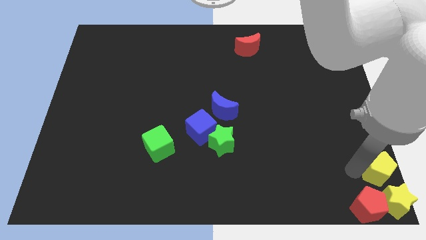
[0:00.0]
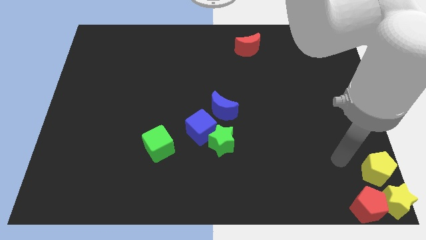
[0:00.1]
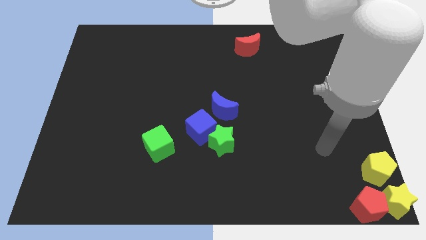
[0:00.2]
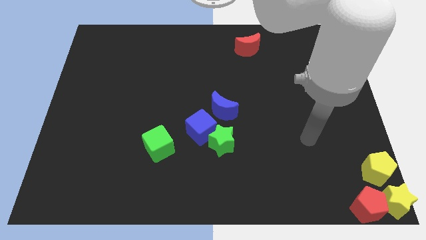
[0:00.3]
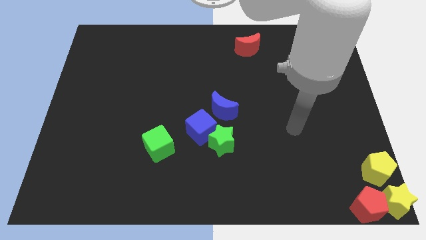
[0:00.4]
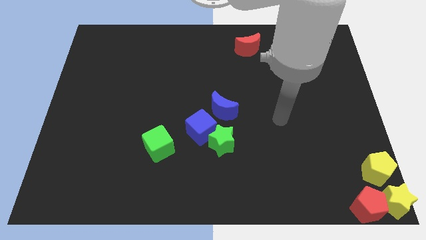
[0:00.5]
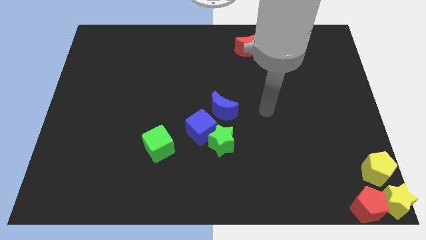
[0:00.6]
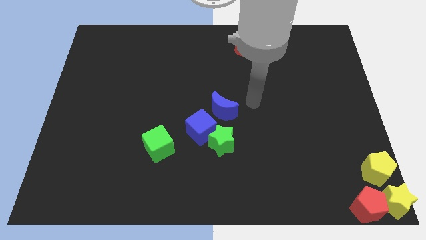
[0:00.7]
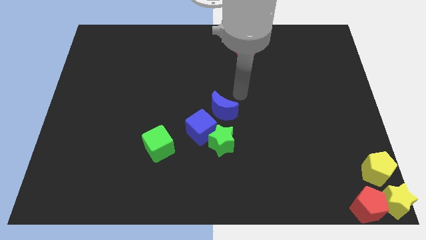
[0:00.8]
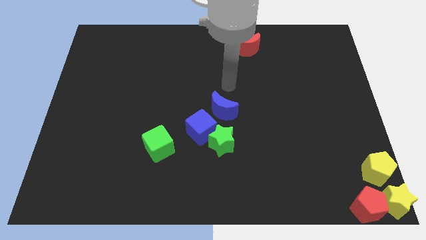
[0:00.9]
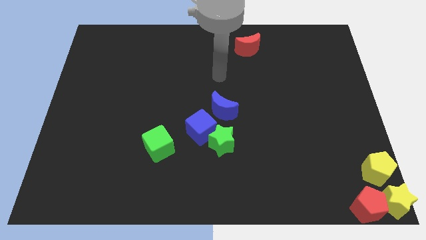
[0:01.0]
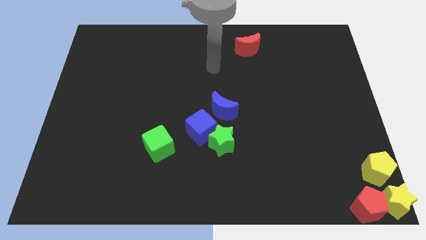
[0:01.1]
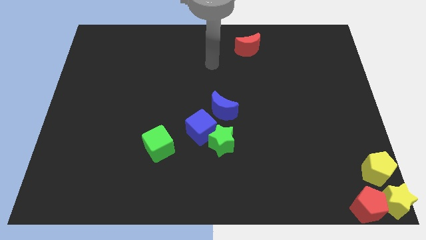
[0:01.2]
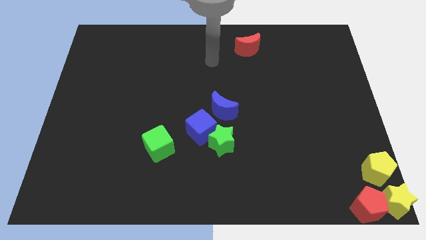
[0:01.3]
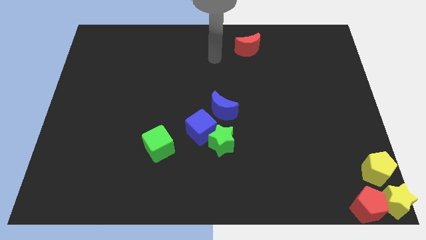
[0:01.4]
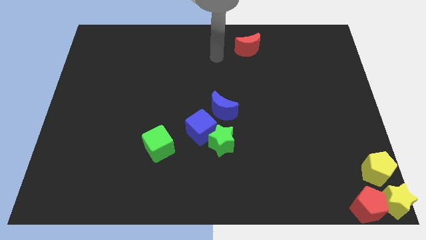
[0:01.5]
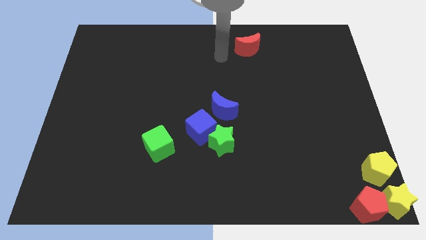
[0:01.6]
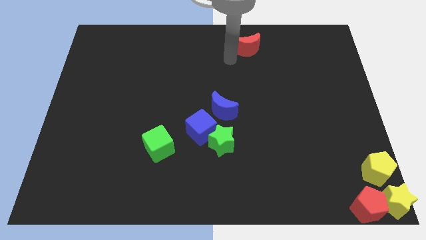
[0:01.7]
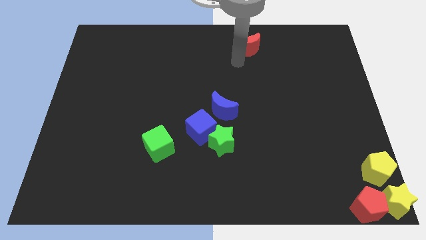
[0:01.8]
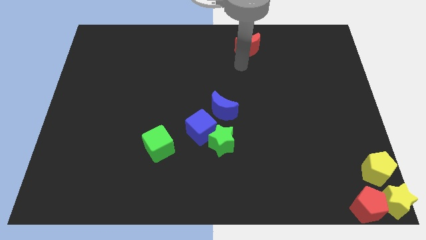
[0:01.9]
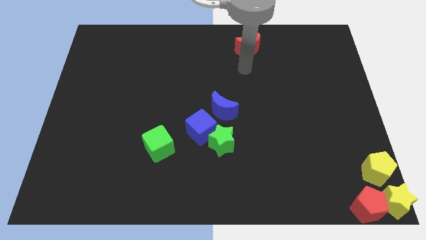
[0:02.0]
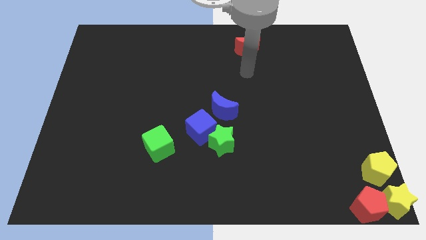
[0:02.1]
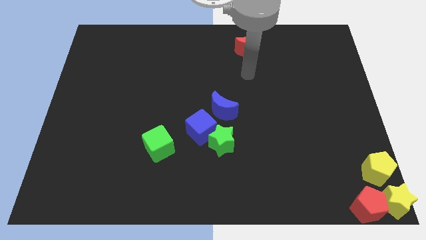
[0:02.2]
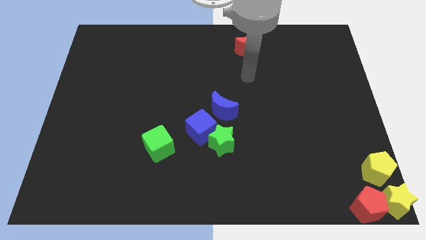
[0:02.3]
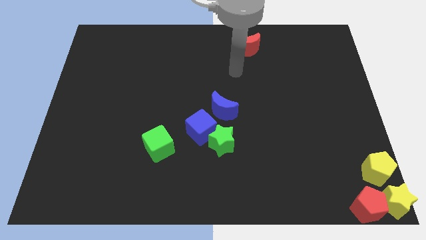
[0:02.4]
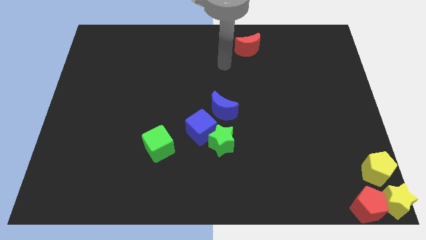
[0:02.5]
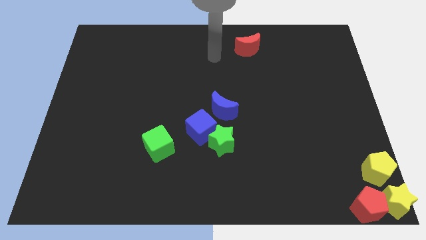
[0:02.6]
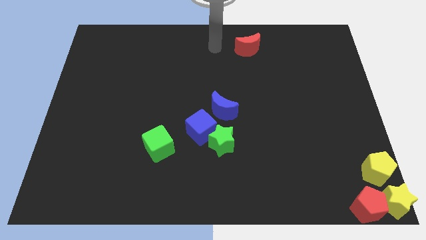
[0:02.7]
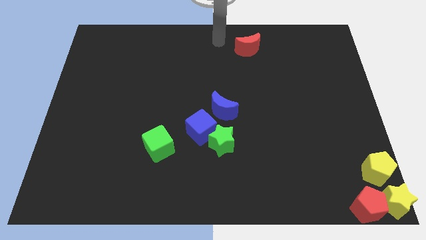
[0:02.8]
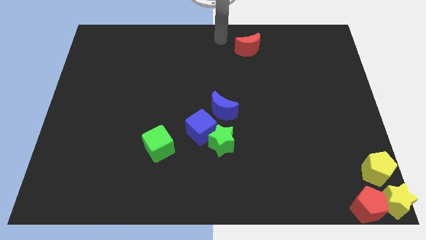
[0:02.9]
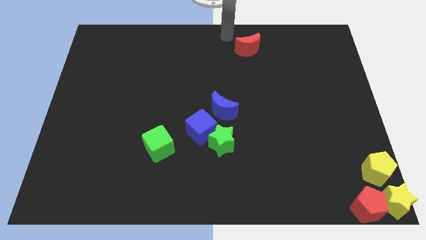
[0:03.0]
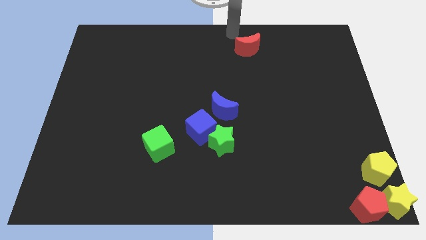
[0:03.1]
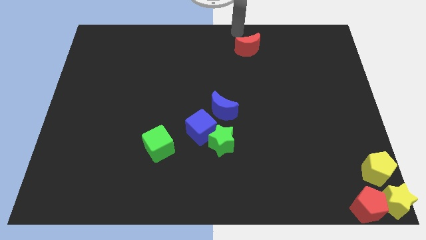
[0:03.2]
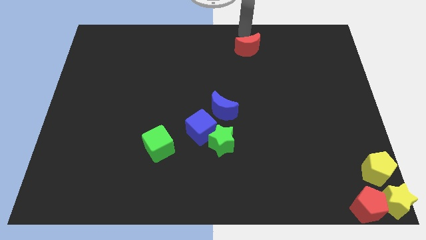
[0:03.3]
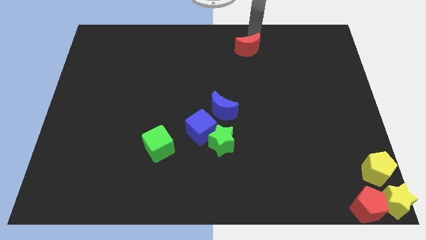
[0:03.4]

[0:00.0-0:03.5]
place your arm at the top of red crescent

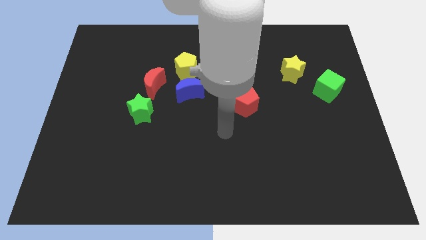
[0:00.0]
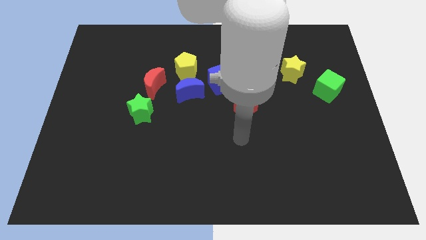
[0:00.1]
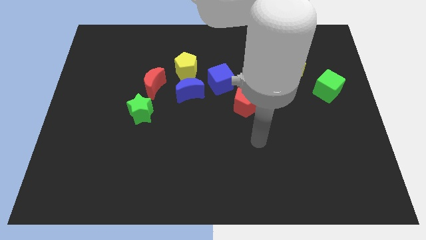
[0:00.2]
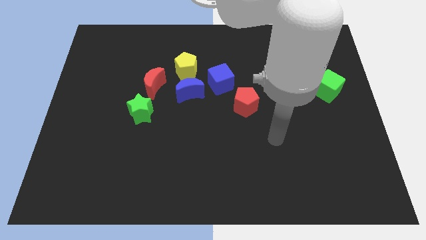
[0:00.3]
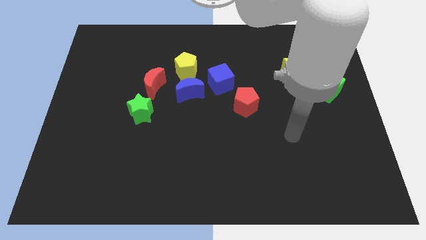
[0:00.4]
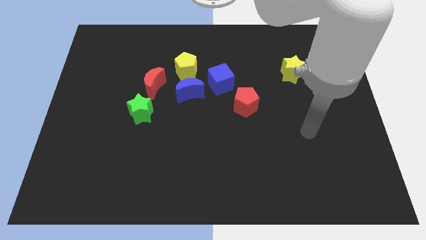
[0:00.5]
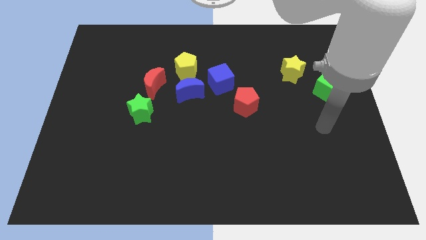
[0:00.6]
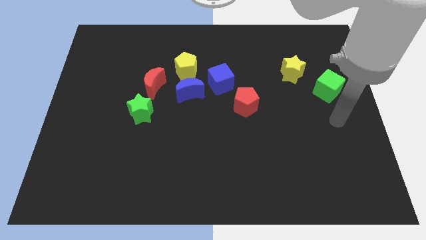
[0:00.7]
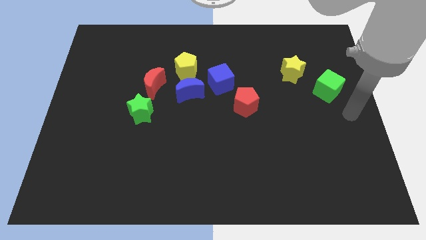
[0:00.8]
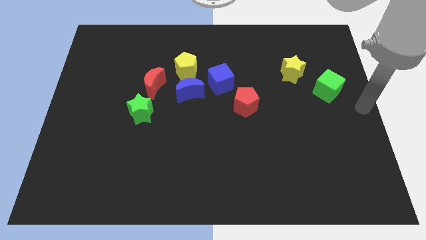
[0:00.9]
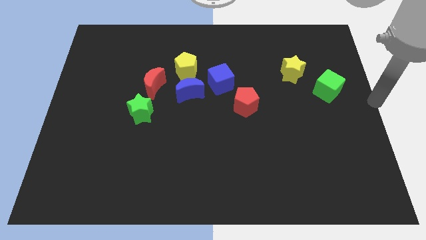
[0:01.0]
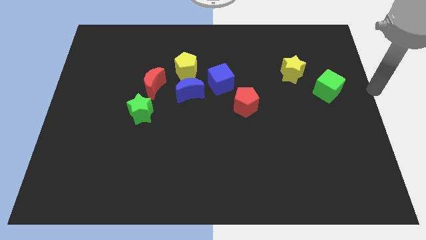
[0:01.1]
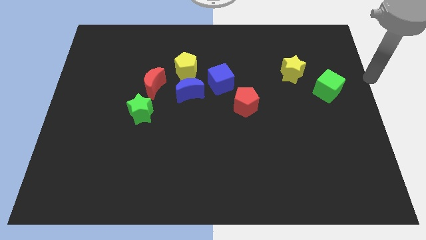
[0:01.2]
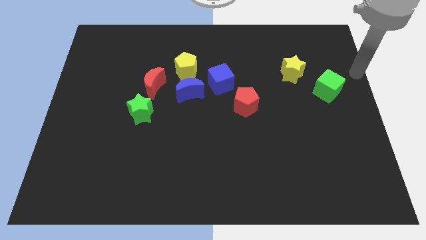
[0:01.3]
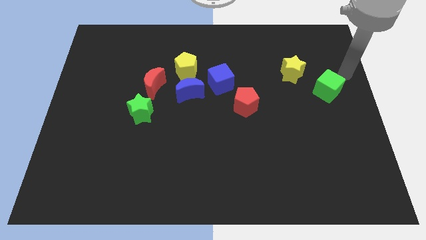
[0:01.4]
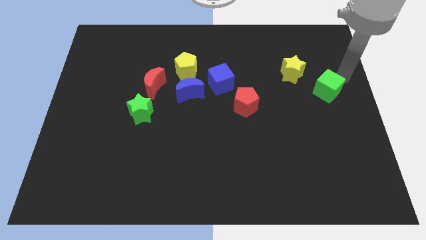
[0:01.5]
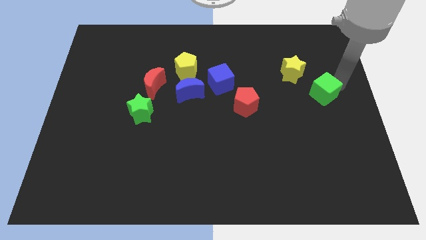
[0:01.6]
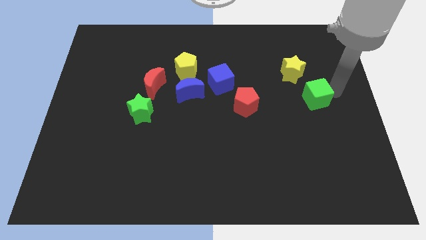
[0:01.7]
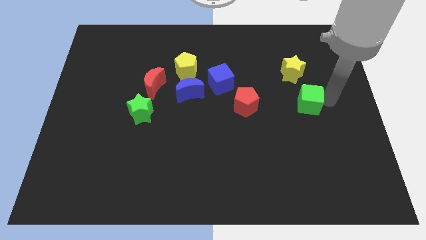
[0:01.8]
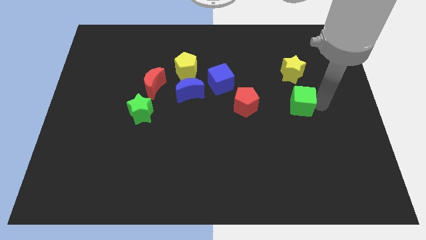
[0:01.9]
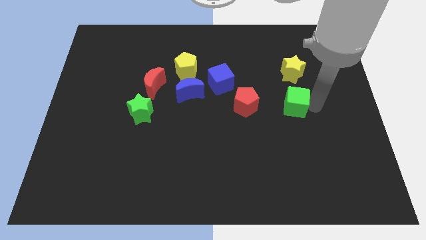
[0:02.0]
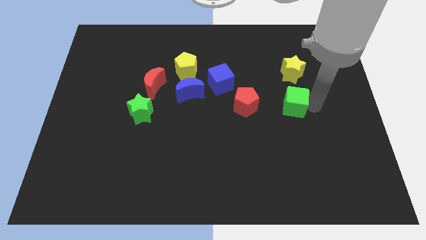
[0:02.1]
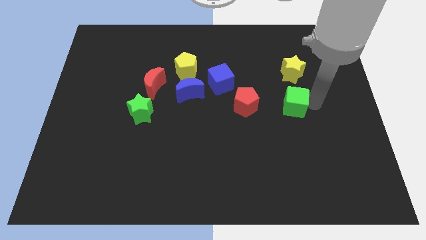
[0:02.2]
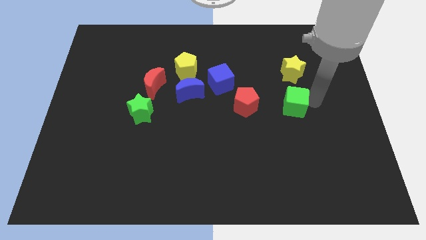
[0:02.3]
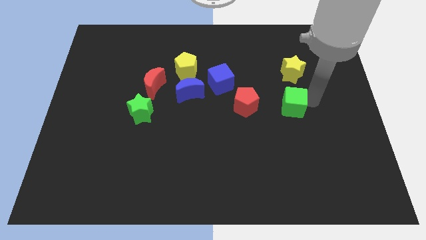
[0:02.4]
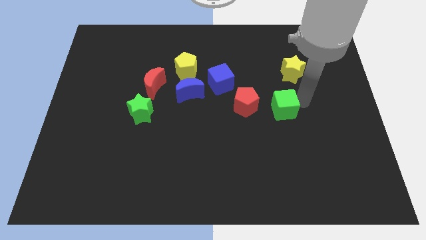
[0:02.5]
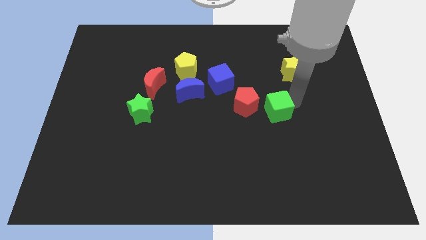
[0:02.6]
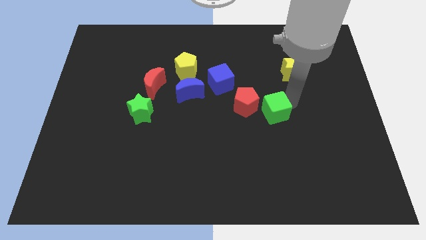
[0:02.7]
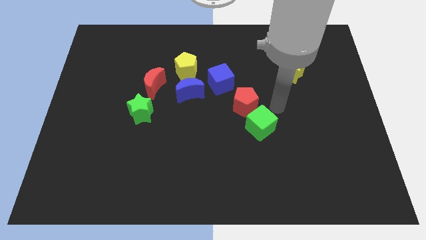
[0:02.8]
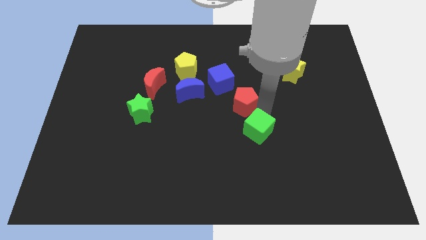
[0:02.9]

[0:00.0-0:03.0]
push the green cube into the red pentagon

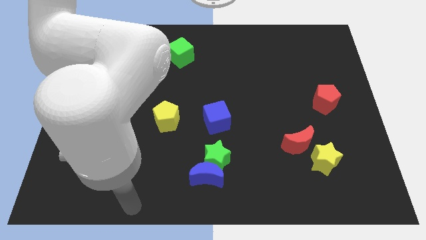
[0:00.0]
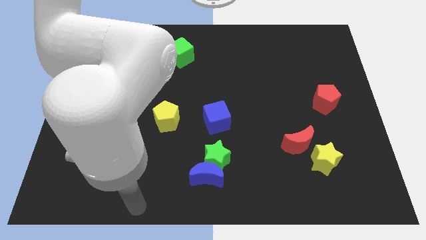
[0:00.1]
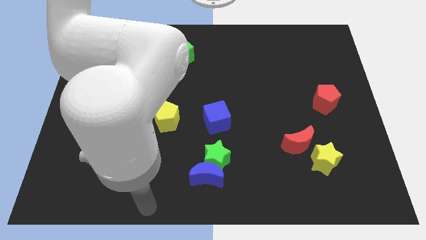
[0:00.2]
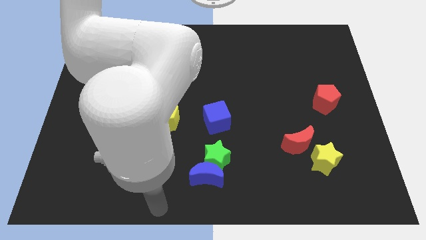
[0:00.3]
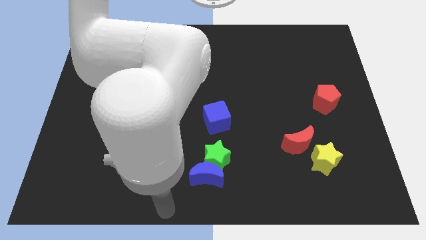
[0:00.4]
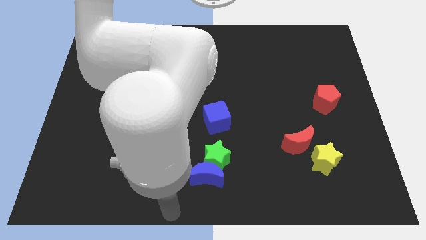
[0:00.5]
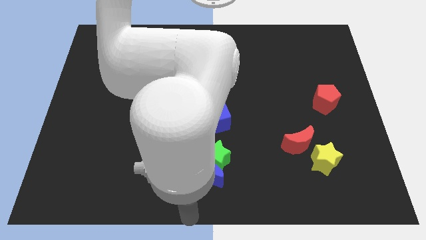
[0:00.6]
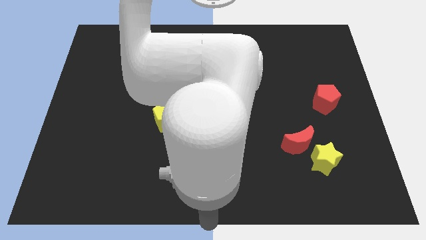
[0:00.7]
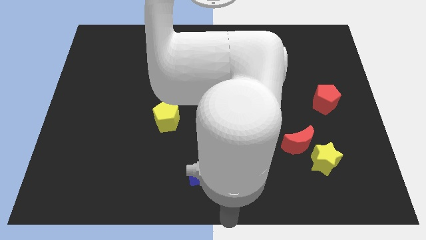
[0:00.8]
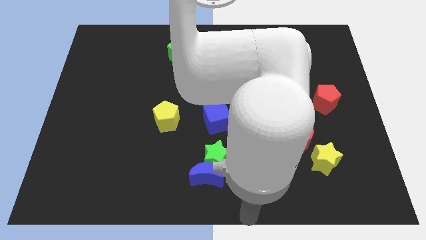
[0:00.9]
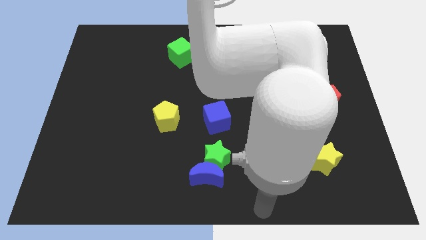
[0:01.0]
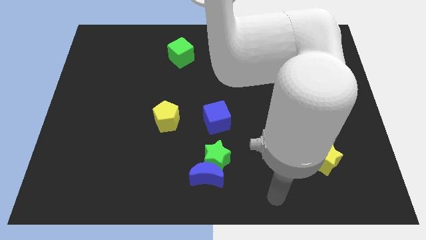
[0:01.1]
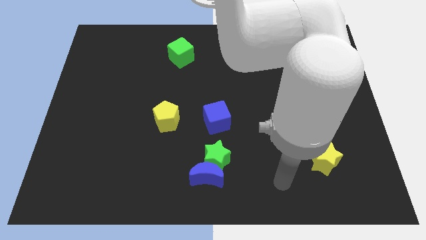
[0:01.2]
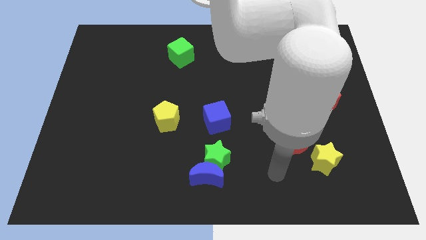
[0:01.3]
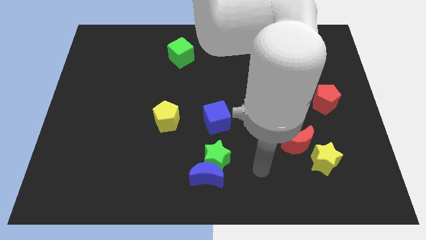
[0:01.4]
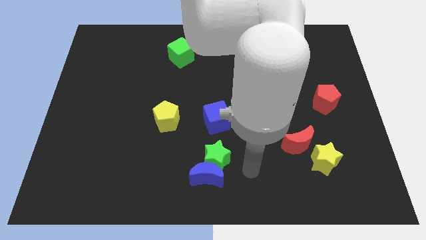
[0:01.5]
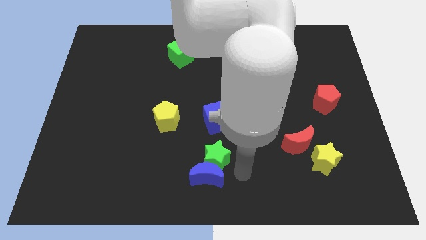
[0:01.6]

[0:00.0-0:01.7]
point your arm to the right of green star

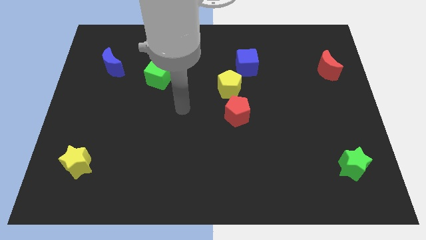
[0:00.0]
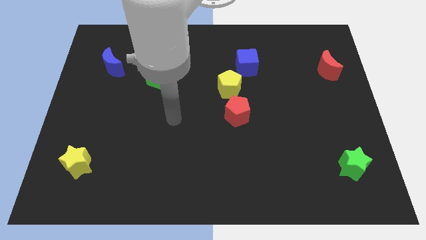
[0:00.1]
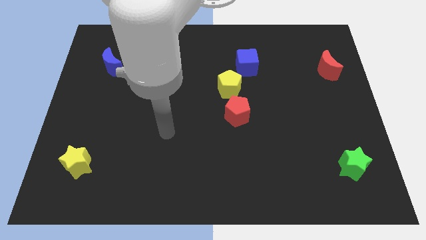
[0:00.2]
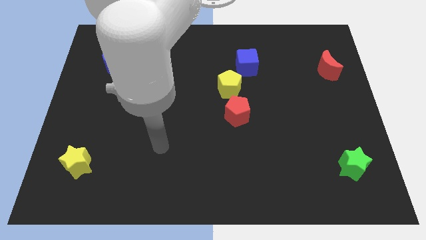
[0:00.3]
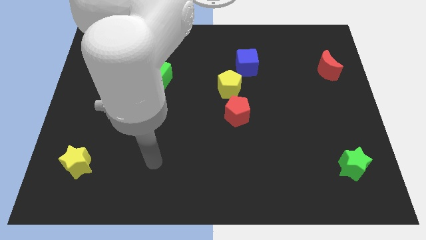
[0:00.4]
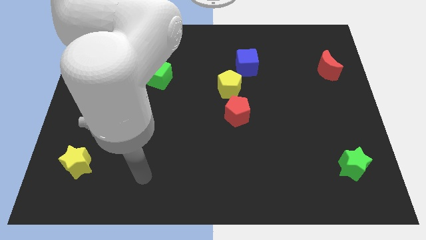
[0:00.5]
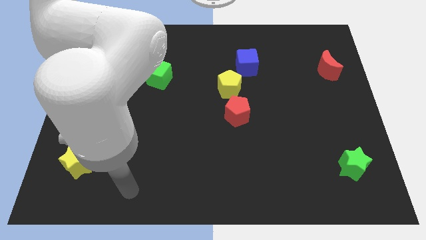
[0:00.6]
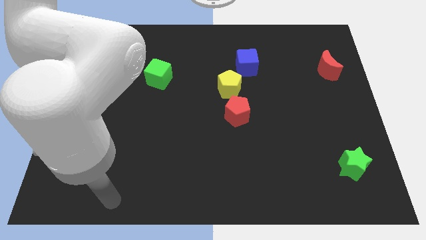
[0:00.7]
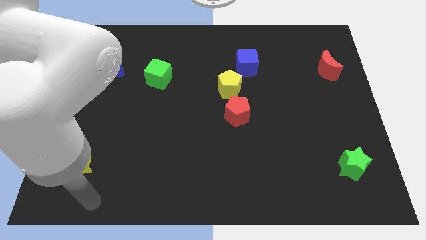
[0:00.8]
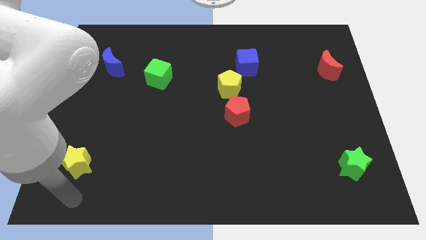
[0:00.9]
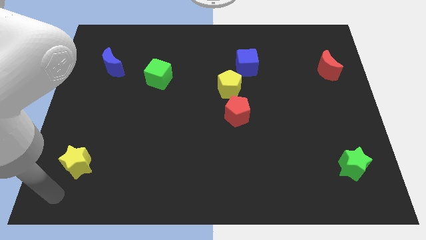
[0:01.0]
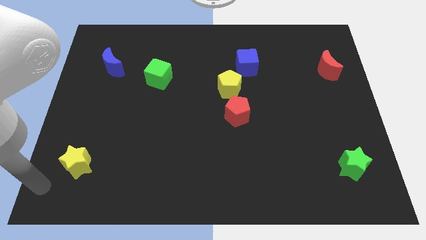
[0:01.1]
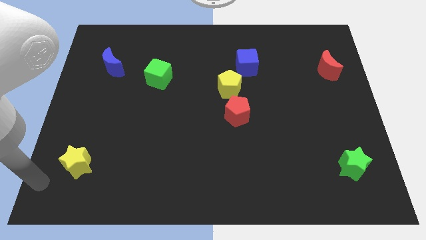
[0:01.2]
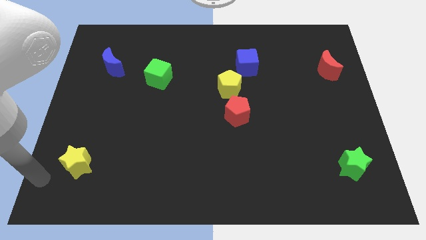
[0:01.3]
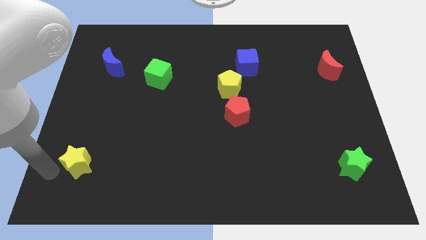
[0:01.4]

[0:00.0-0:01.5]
point your arm at the left of the yellow star
